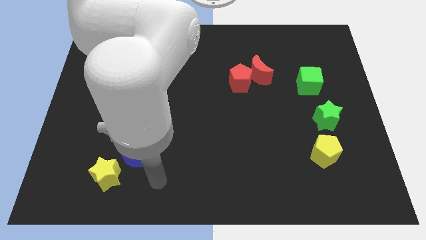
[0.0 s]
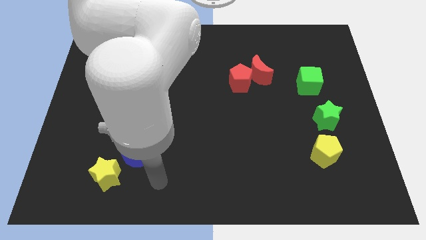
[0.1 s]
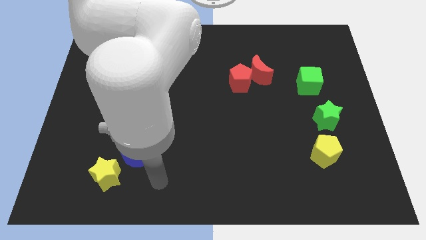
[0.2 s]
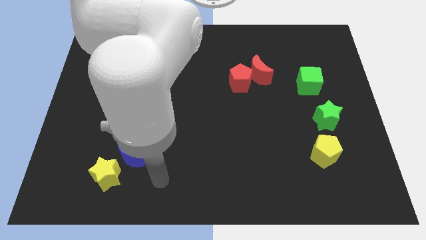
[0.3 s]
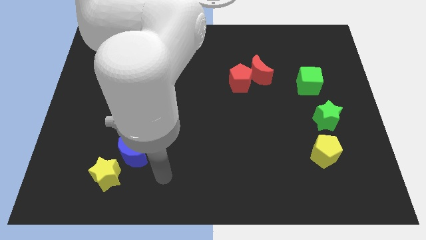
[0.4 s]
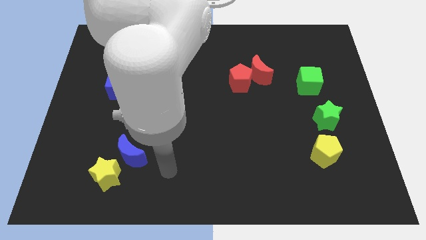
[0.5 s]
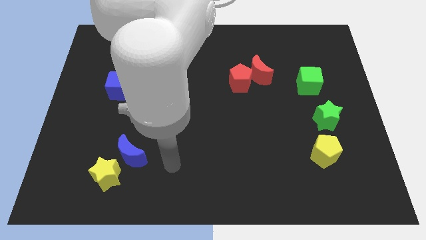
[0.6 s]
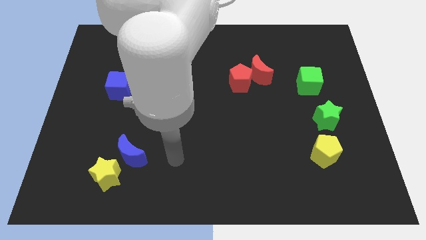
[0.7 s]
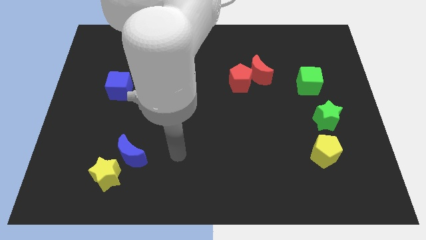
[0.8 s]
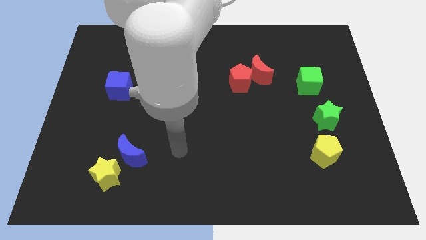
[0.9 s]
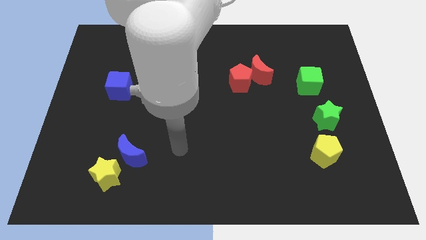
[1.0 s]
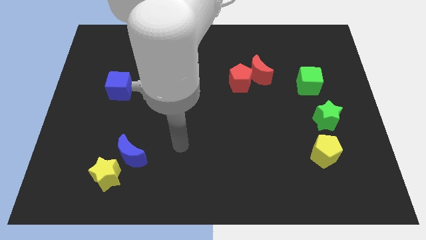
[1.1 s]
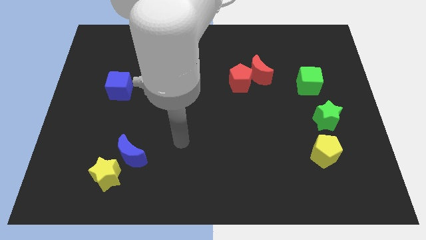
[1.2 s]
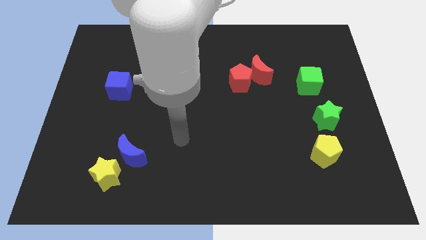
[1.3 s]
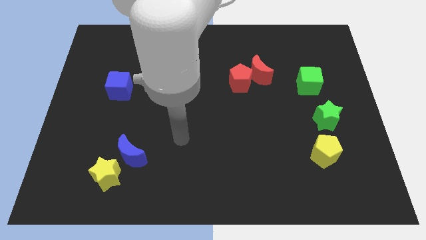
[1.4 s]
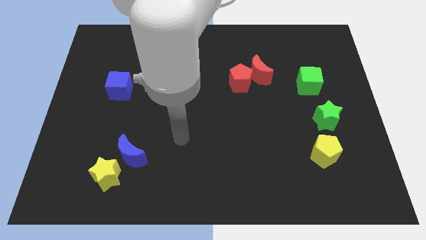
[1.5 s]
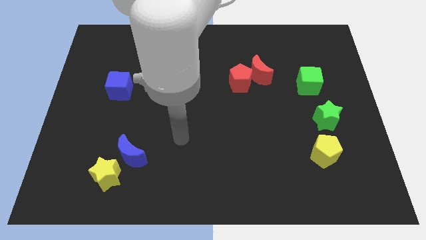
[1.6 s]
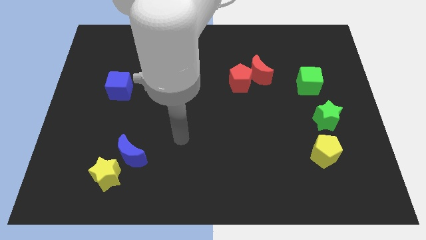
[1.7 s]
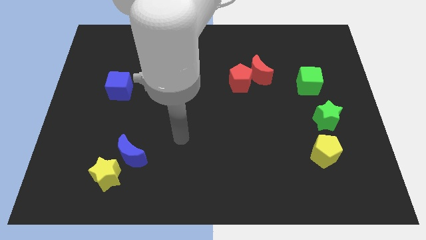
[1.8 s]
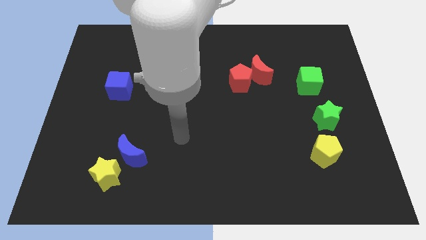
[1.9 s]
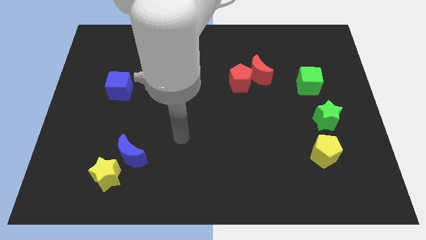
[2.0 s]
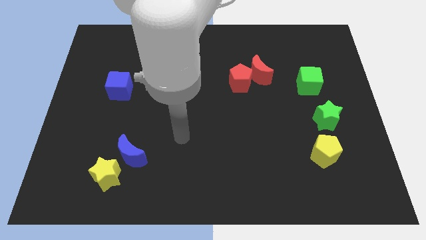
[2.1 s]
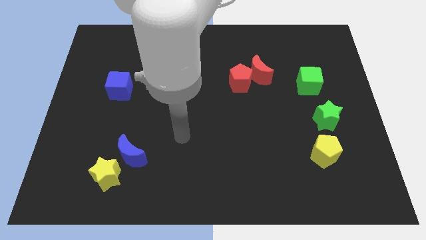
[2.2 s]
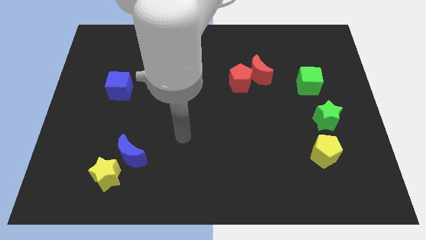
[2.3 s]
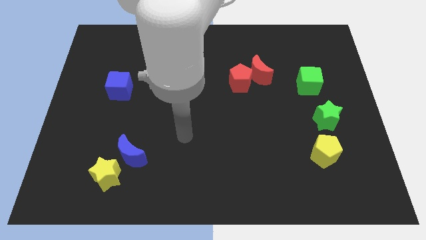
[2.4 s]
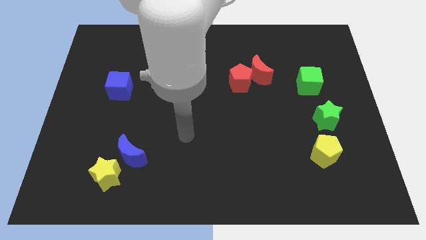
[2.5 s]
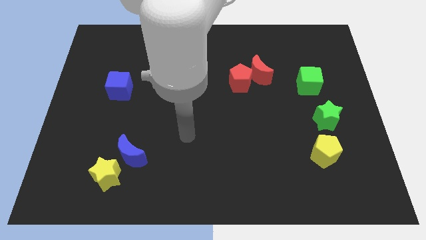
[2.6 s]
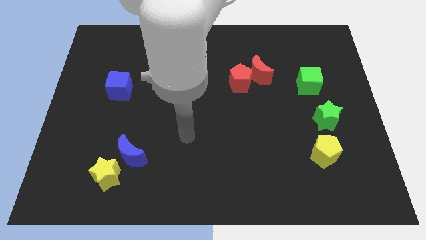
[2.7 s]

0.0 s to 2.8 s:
move the arm diagonal to right side of the blue crescent

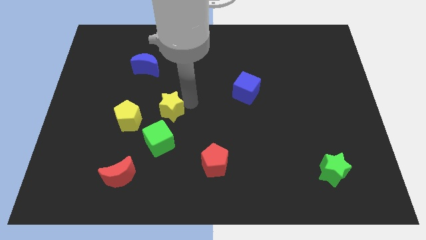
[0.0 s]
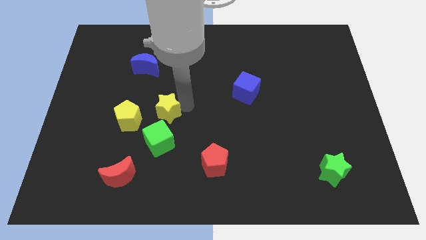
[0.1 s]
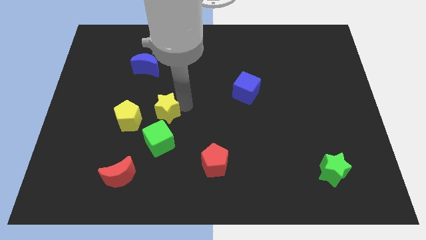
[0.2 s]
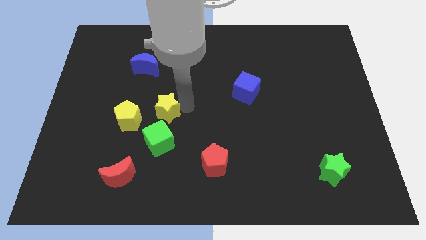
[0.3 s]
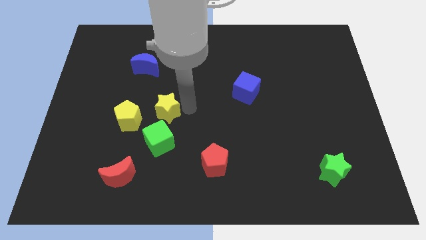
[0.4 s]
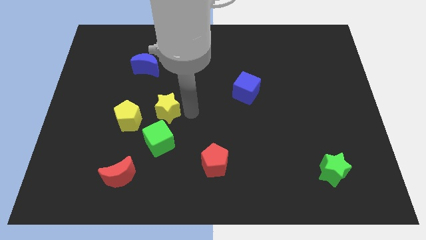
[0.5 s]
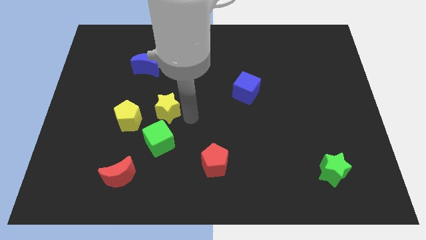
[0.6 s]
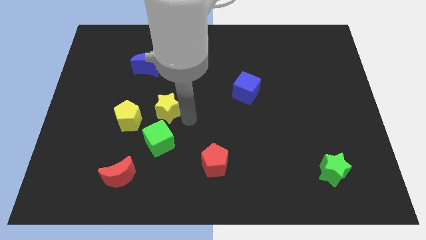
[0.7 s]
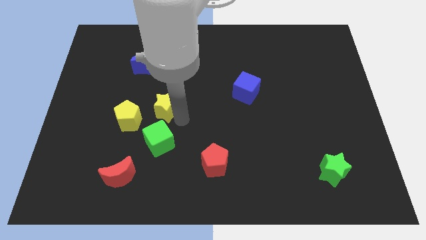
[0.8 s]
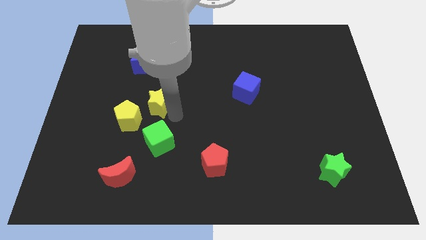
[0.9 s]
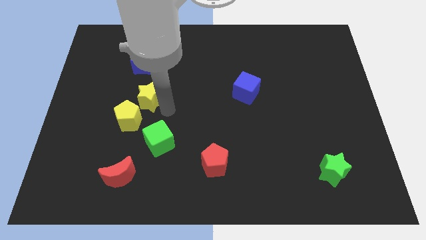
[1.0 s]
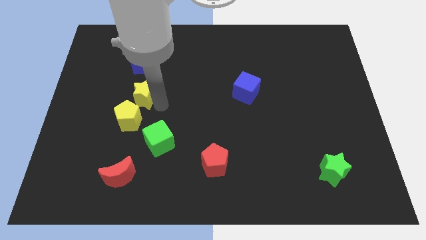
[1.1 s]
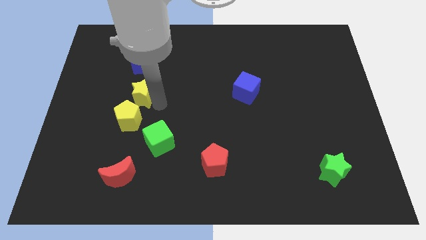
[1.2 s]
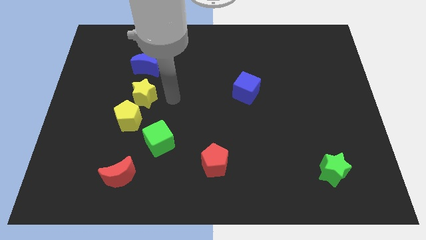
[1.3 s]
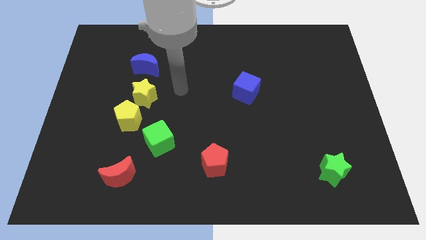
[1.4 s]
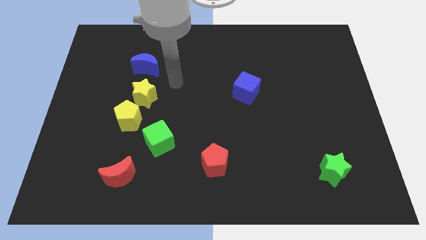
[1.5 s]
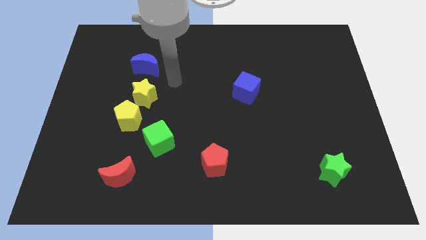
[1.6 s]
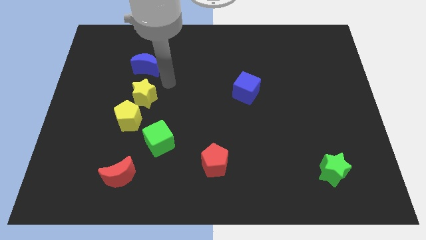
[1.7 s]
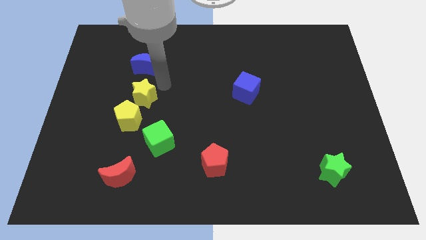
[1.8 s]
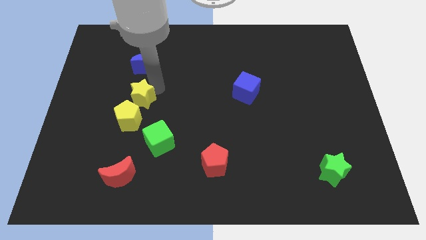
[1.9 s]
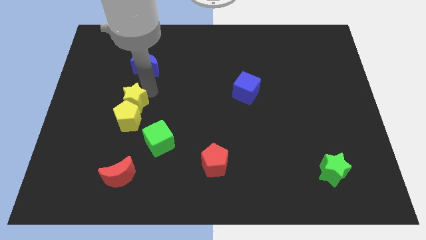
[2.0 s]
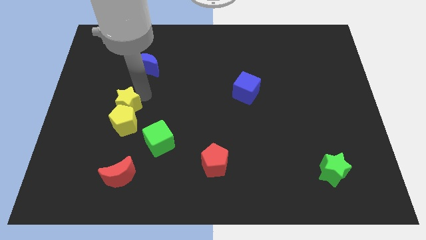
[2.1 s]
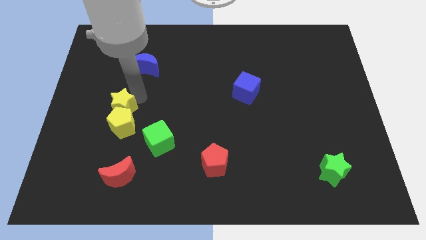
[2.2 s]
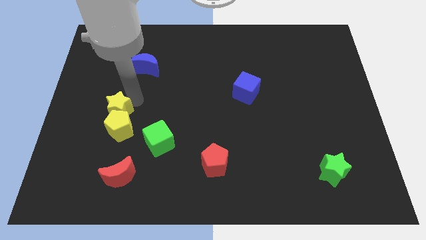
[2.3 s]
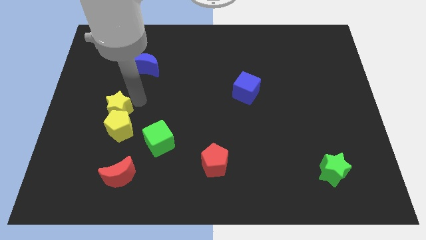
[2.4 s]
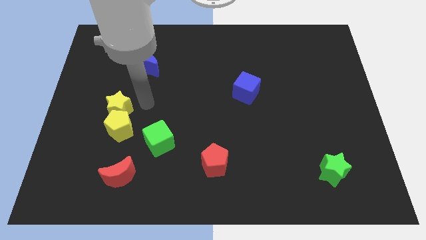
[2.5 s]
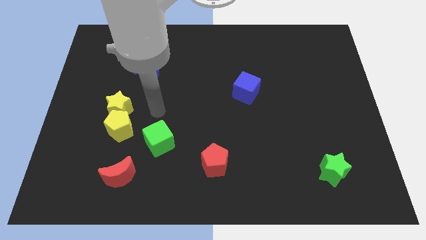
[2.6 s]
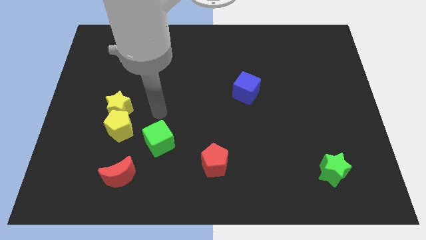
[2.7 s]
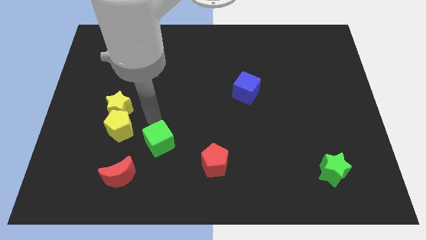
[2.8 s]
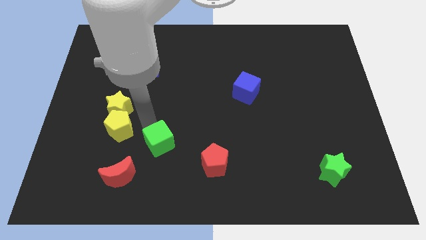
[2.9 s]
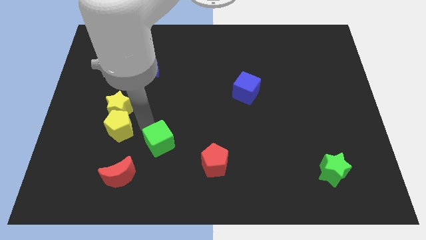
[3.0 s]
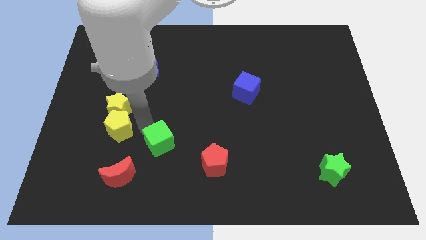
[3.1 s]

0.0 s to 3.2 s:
push the yellow blocks at the top of red moon

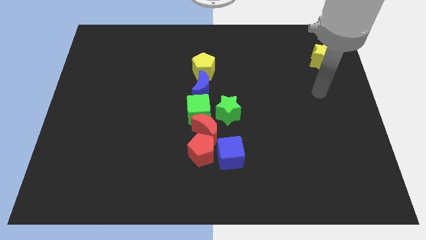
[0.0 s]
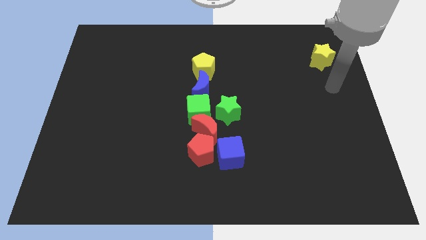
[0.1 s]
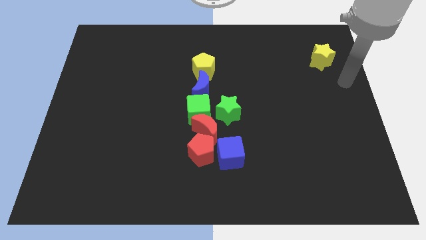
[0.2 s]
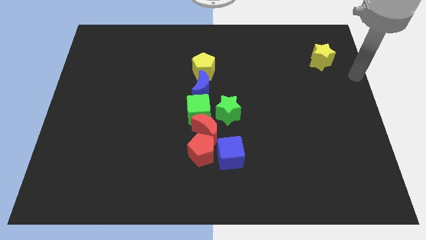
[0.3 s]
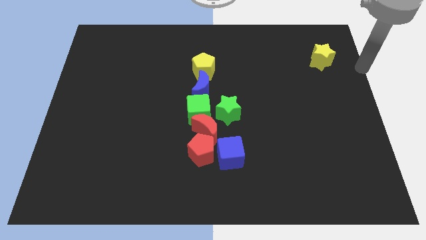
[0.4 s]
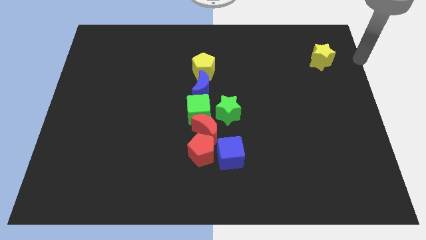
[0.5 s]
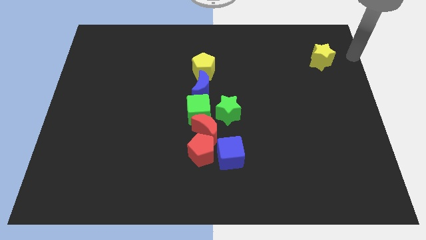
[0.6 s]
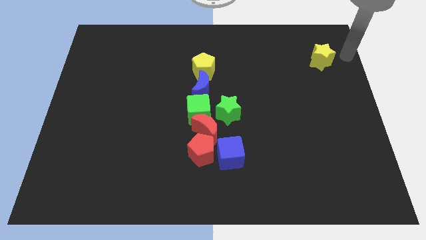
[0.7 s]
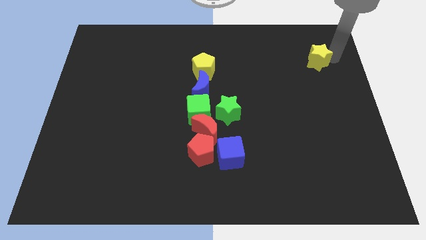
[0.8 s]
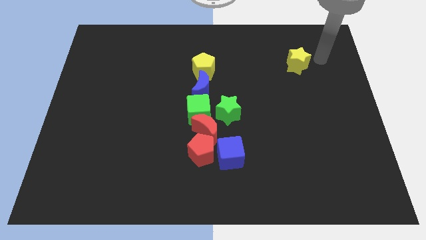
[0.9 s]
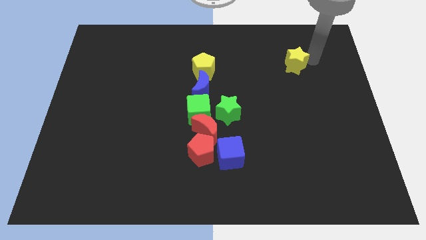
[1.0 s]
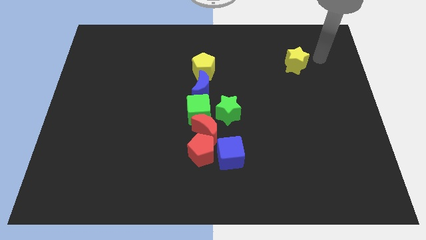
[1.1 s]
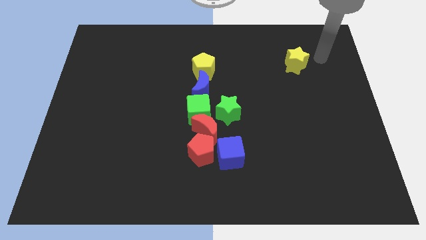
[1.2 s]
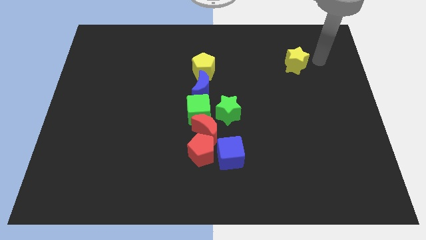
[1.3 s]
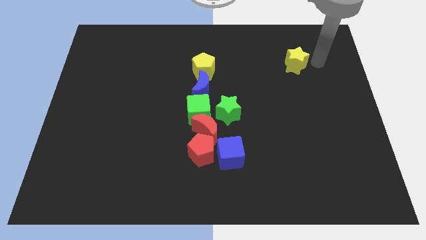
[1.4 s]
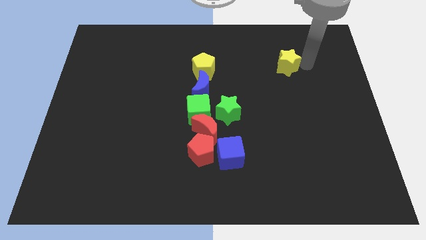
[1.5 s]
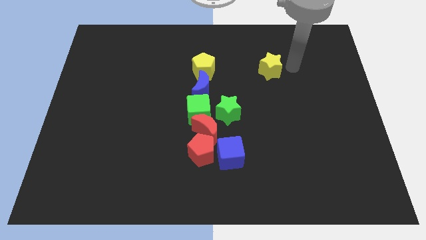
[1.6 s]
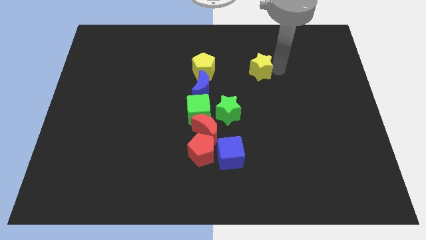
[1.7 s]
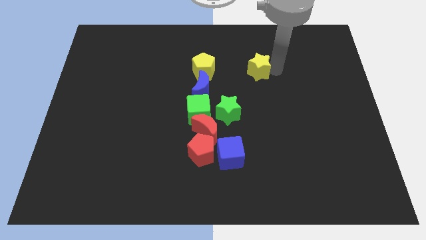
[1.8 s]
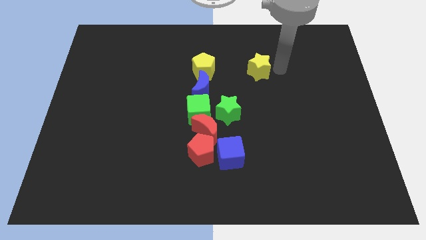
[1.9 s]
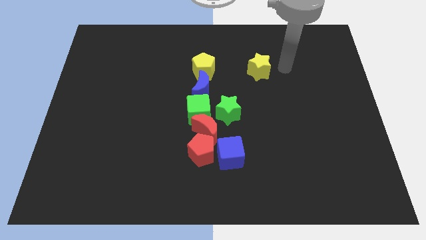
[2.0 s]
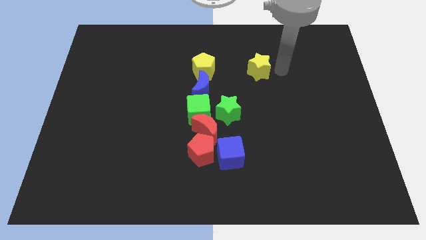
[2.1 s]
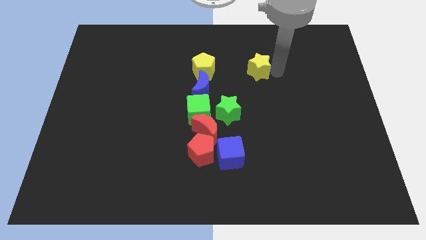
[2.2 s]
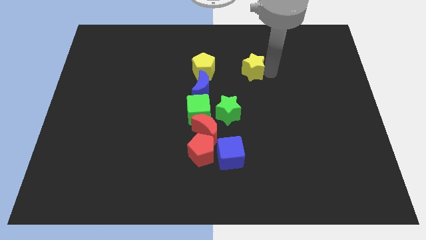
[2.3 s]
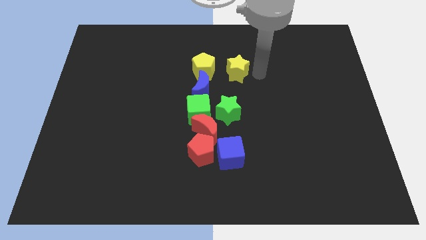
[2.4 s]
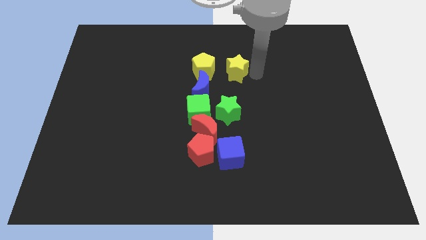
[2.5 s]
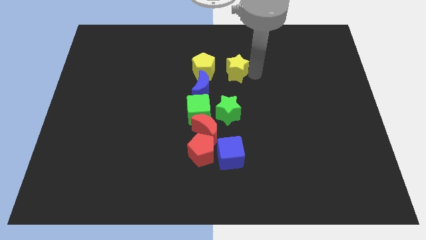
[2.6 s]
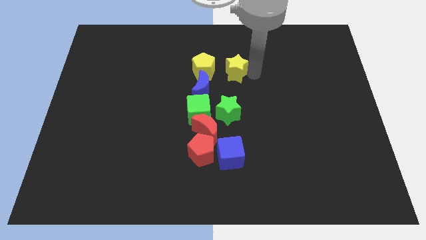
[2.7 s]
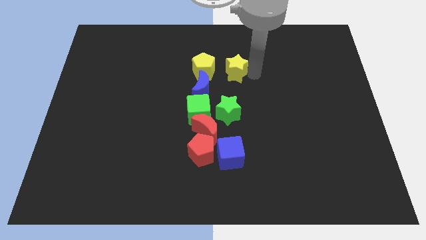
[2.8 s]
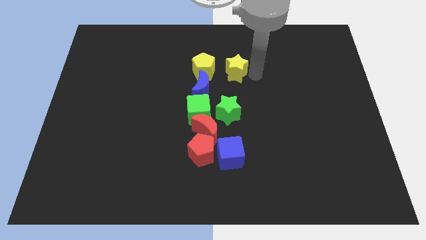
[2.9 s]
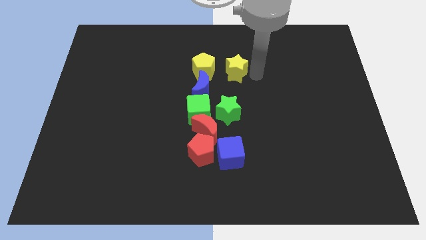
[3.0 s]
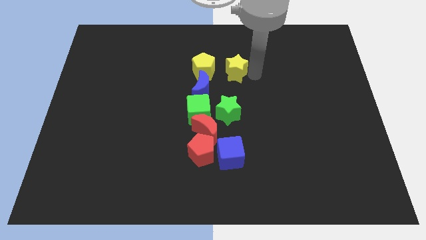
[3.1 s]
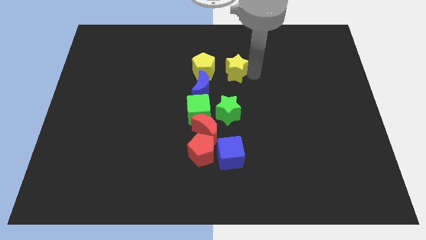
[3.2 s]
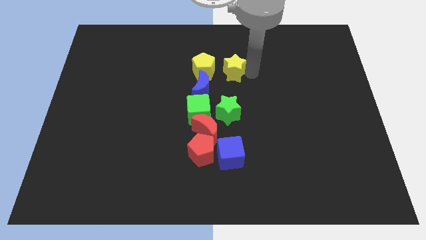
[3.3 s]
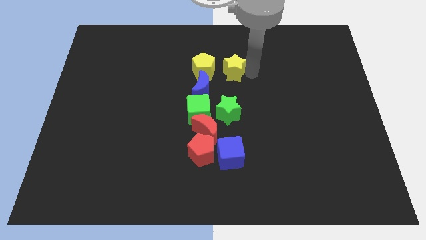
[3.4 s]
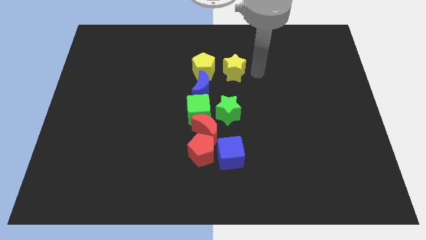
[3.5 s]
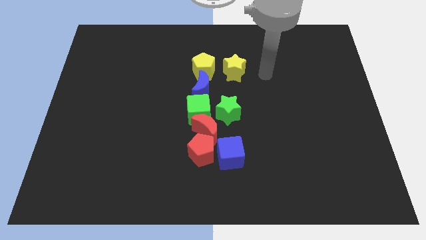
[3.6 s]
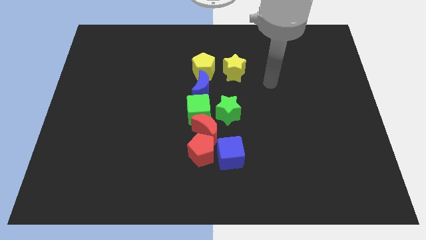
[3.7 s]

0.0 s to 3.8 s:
move the yellow star to the right of the yellow pentagon
